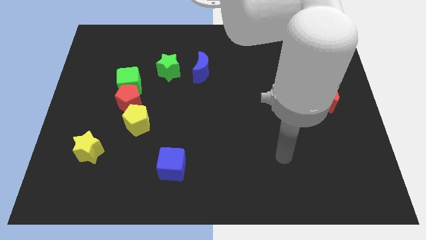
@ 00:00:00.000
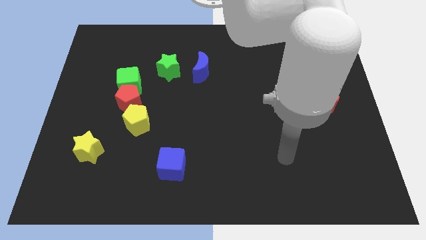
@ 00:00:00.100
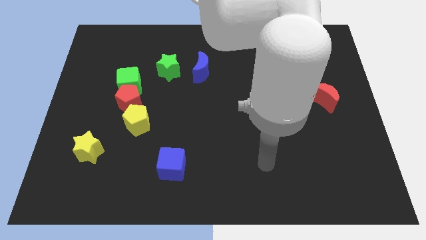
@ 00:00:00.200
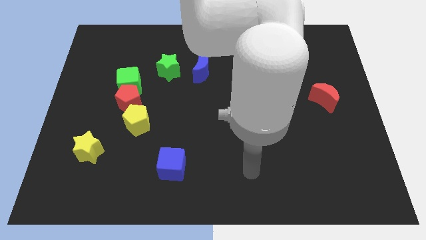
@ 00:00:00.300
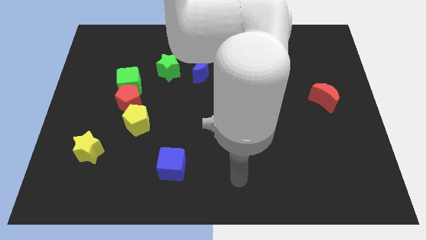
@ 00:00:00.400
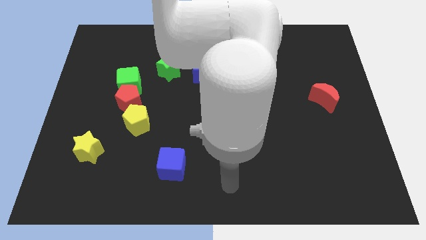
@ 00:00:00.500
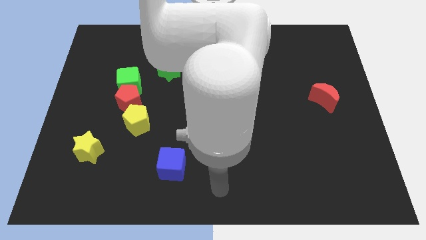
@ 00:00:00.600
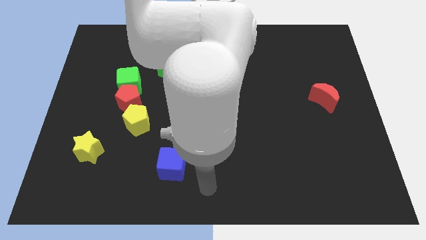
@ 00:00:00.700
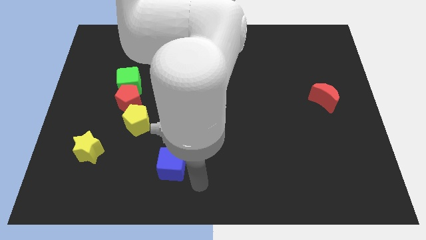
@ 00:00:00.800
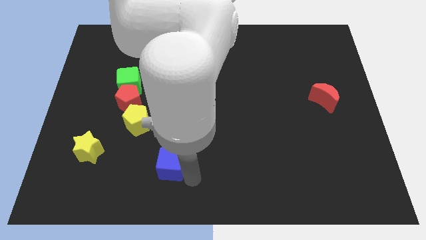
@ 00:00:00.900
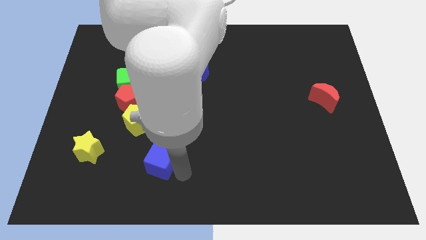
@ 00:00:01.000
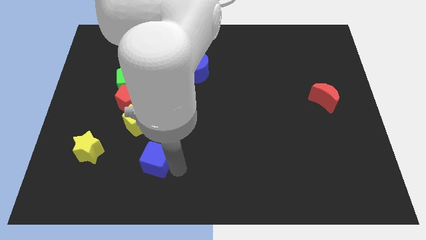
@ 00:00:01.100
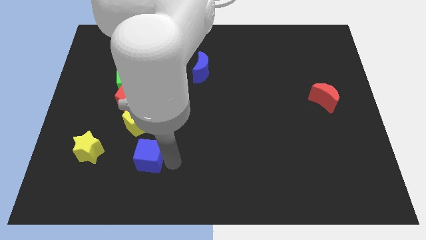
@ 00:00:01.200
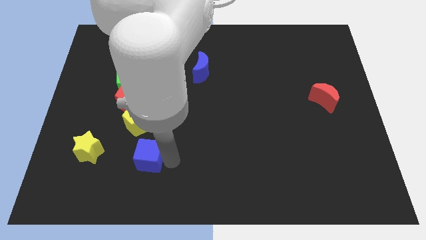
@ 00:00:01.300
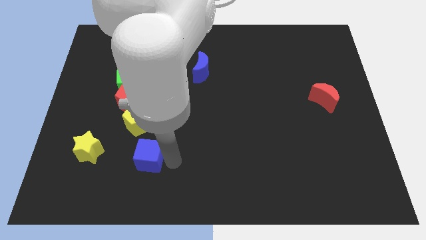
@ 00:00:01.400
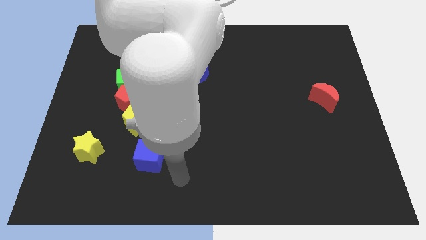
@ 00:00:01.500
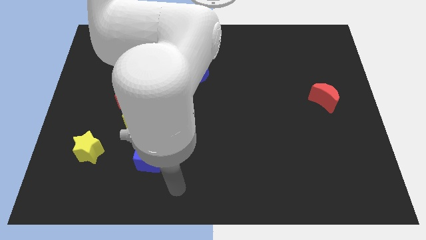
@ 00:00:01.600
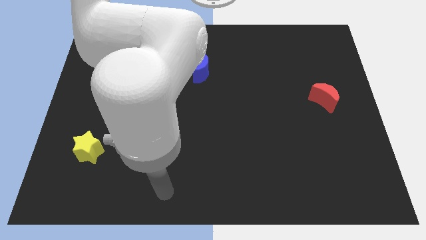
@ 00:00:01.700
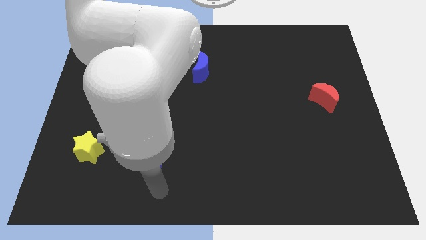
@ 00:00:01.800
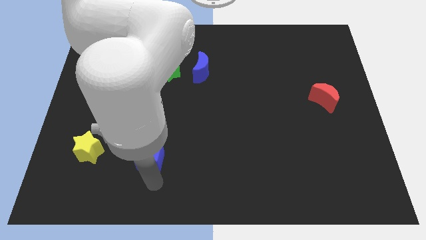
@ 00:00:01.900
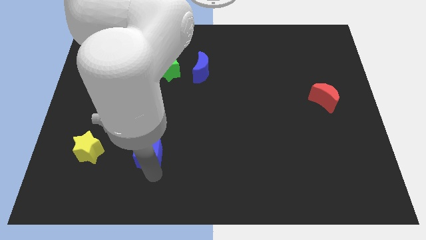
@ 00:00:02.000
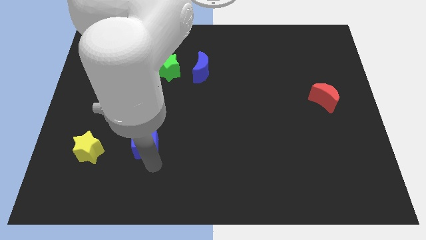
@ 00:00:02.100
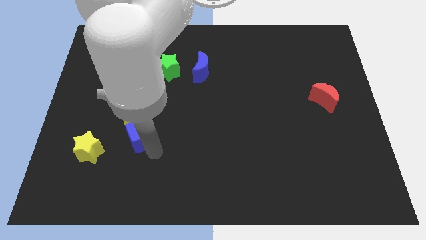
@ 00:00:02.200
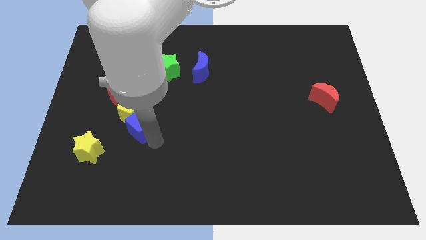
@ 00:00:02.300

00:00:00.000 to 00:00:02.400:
move the blue cube close to the yellow pentagon

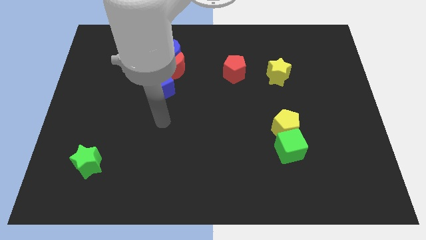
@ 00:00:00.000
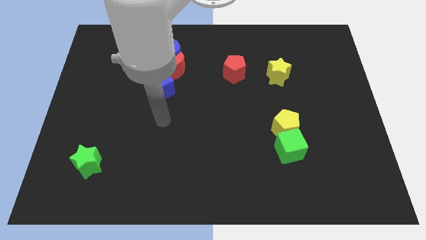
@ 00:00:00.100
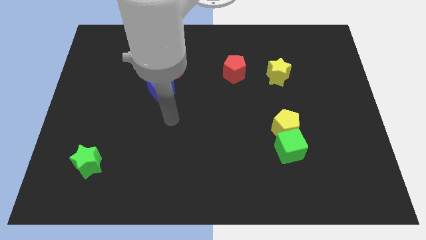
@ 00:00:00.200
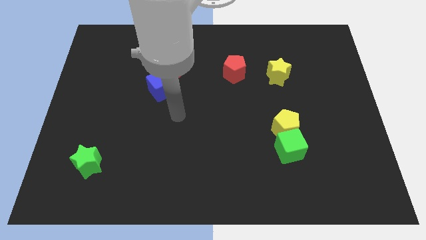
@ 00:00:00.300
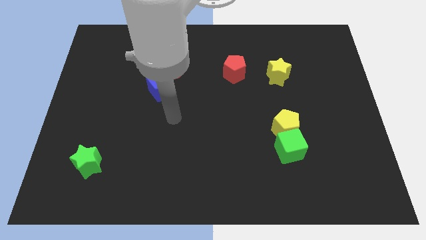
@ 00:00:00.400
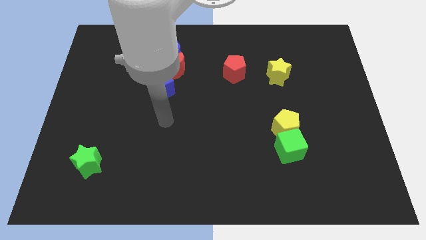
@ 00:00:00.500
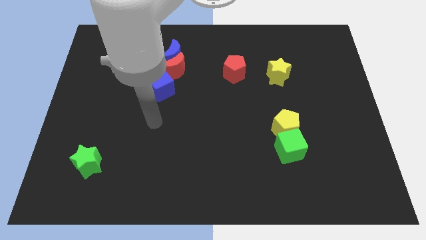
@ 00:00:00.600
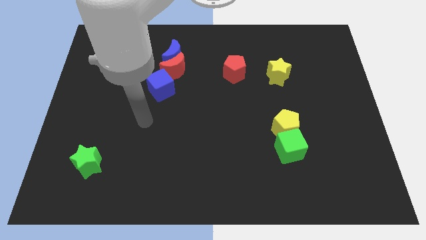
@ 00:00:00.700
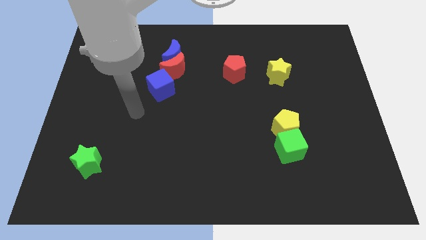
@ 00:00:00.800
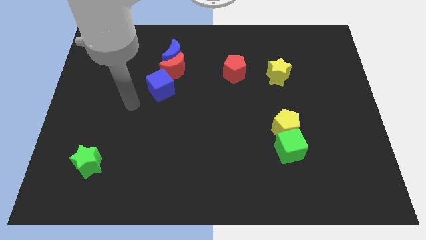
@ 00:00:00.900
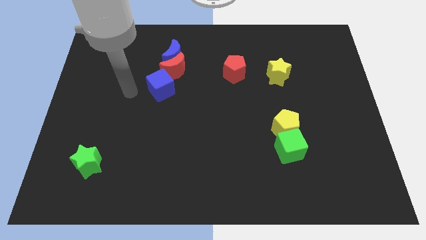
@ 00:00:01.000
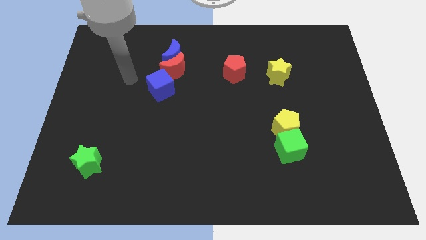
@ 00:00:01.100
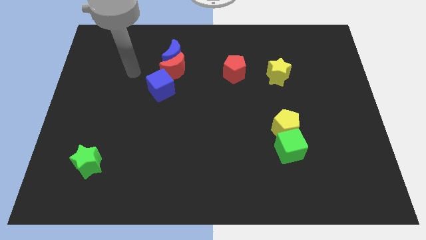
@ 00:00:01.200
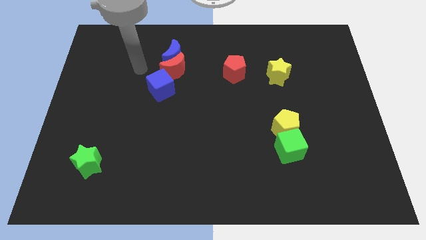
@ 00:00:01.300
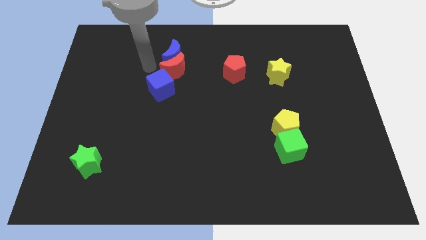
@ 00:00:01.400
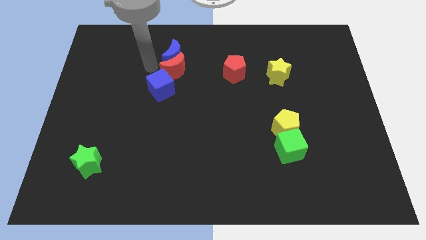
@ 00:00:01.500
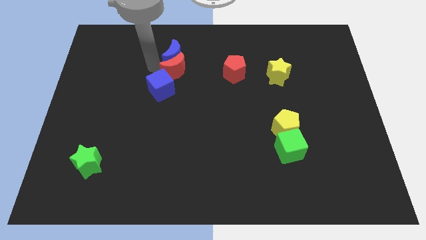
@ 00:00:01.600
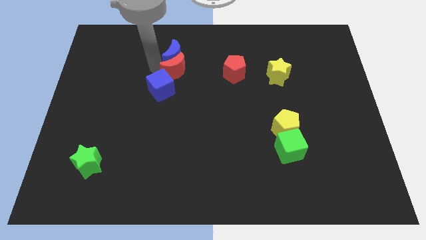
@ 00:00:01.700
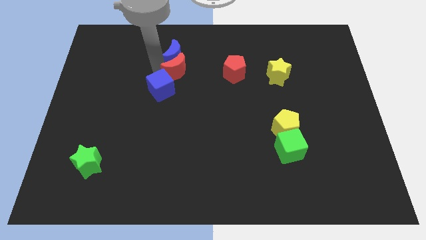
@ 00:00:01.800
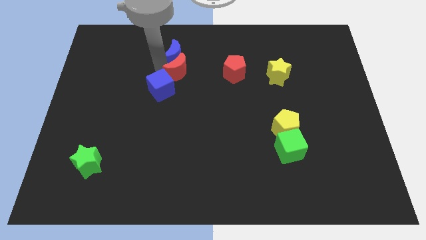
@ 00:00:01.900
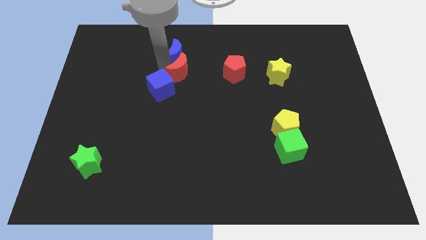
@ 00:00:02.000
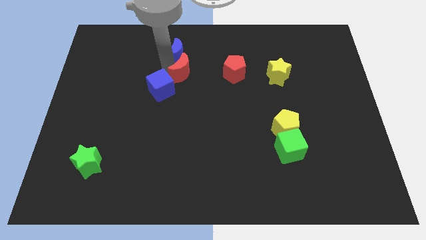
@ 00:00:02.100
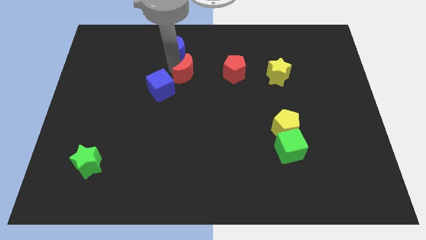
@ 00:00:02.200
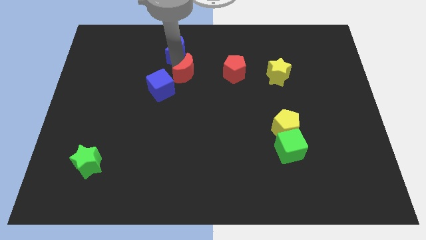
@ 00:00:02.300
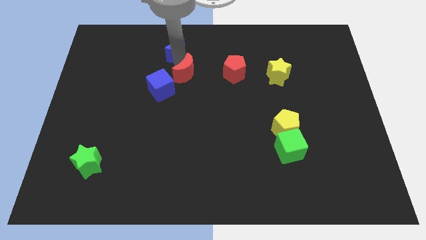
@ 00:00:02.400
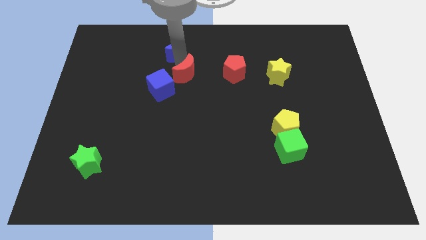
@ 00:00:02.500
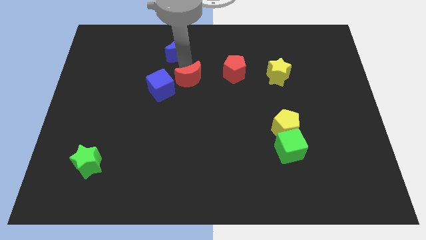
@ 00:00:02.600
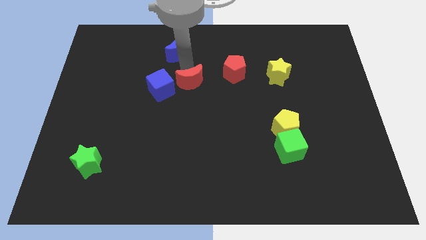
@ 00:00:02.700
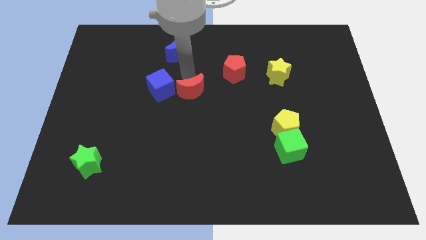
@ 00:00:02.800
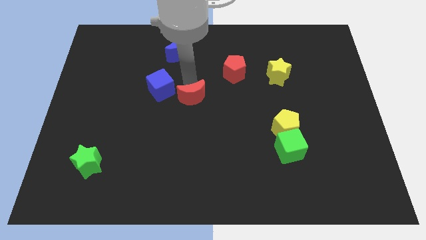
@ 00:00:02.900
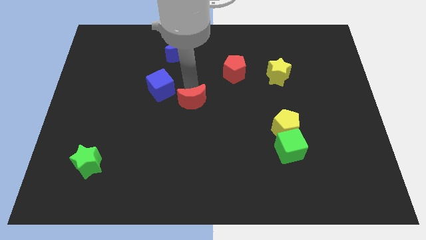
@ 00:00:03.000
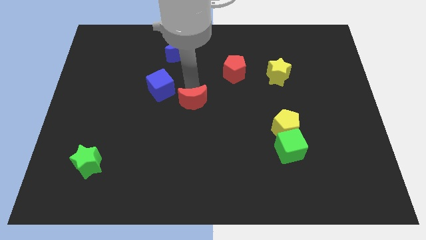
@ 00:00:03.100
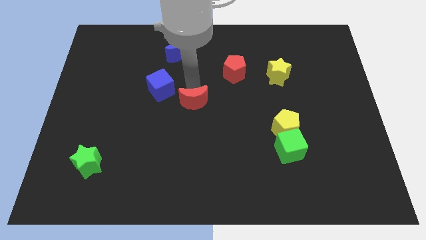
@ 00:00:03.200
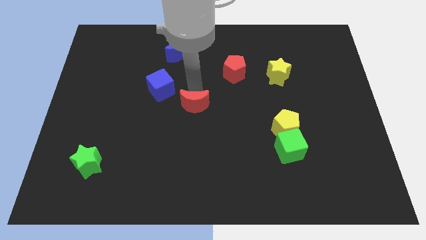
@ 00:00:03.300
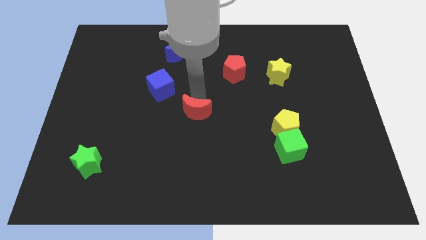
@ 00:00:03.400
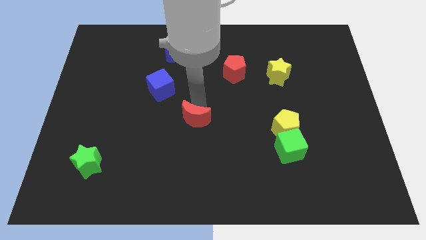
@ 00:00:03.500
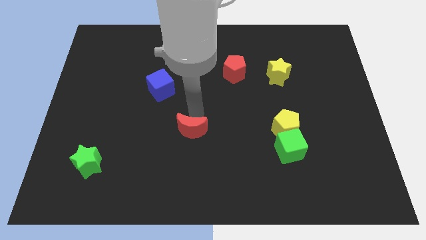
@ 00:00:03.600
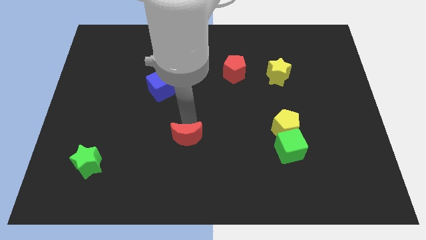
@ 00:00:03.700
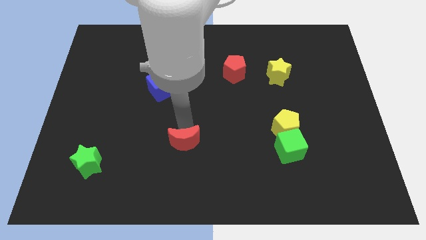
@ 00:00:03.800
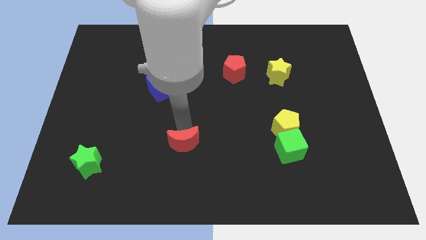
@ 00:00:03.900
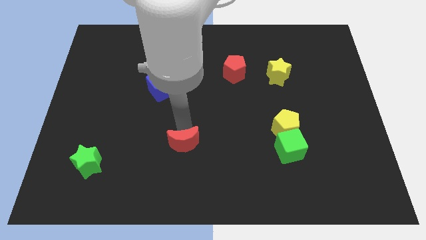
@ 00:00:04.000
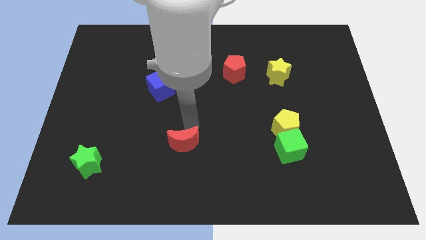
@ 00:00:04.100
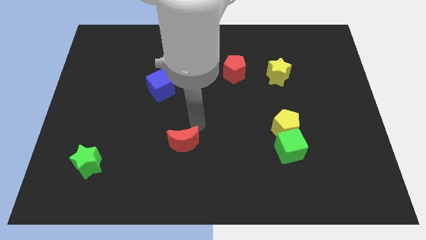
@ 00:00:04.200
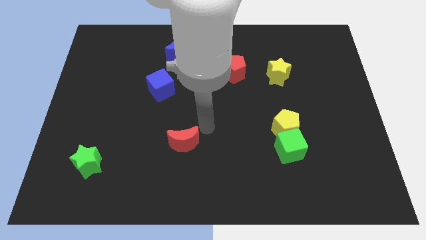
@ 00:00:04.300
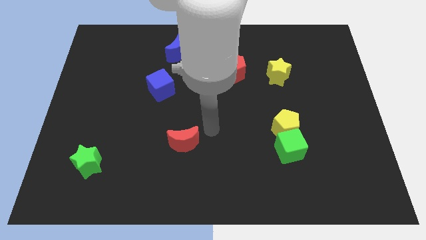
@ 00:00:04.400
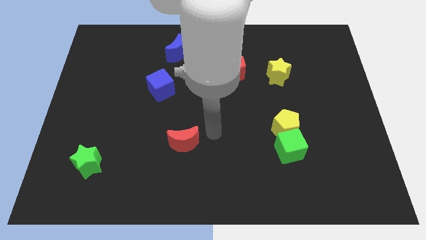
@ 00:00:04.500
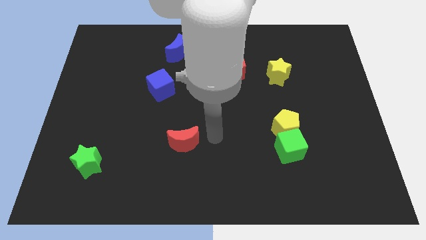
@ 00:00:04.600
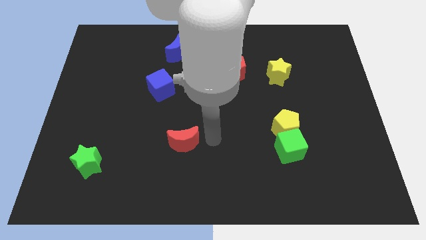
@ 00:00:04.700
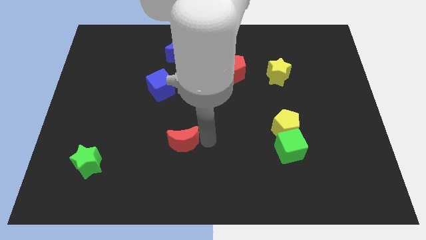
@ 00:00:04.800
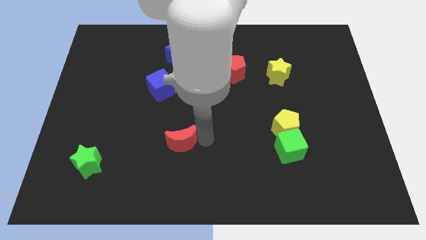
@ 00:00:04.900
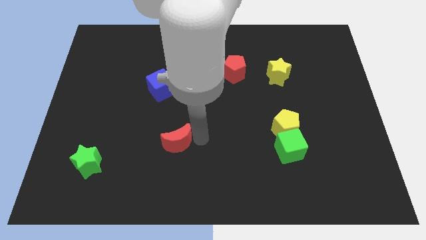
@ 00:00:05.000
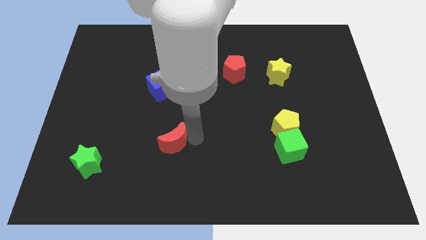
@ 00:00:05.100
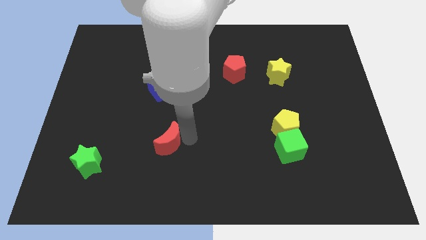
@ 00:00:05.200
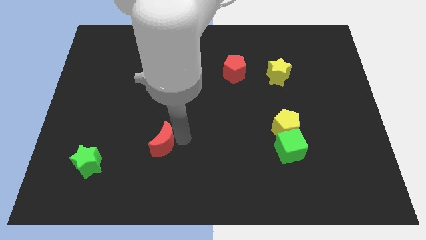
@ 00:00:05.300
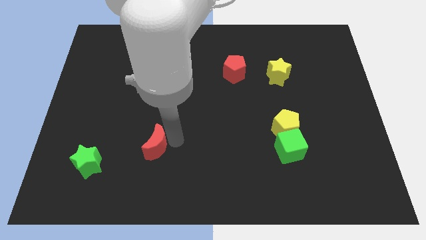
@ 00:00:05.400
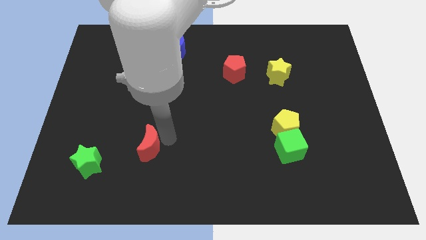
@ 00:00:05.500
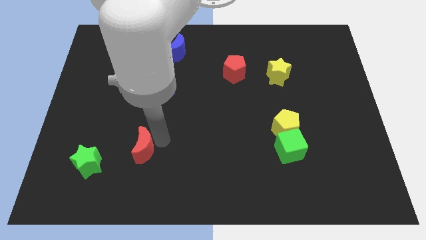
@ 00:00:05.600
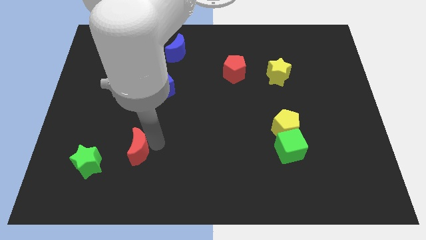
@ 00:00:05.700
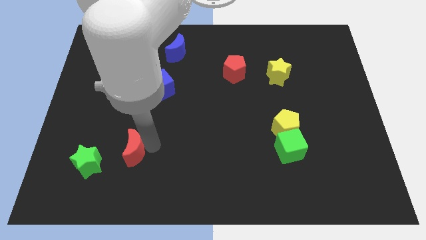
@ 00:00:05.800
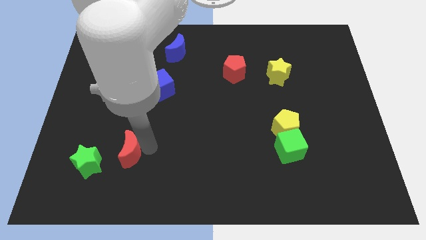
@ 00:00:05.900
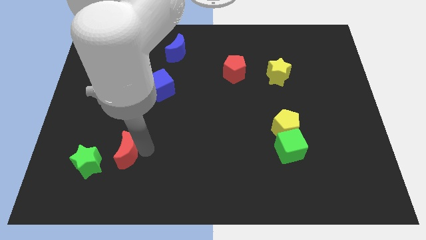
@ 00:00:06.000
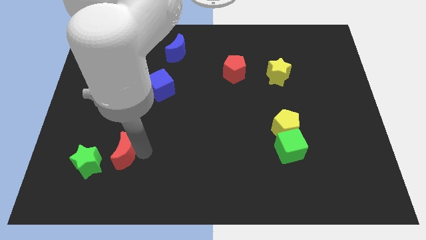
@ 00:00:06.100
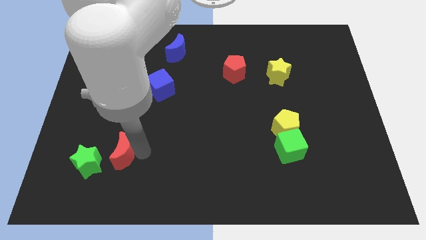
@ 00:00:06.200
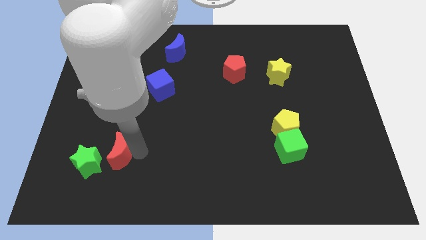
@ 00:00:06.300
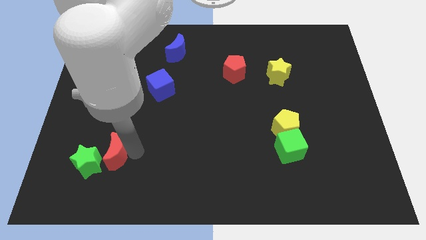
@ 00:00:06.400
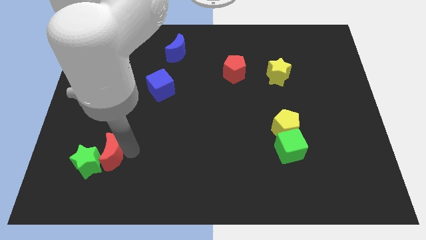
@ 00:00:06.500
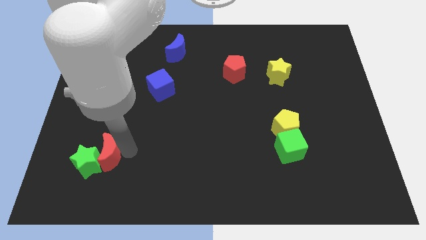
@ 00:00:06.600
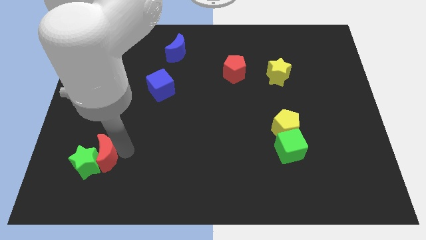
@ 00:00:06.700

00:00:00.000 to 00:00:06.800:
put the red moon next to the green star
